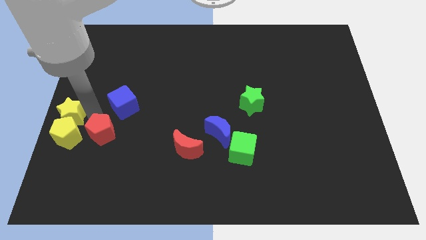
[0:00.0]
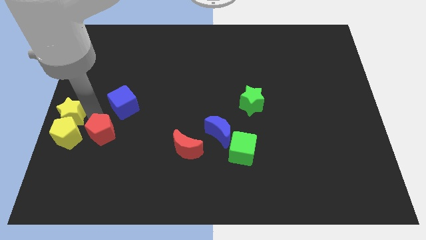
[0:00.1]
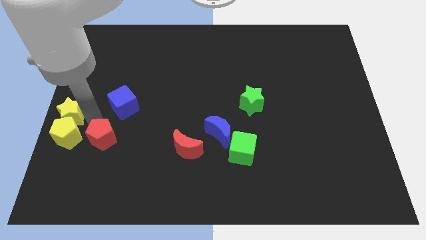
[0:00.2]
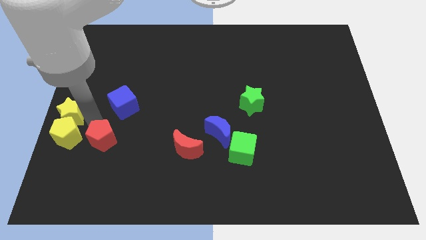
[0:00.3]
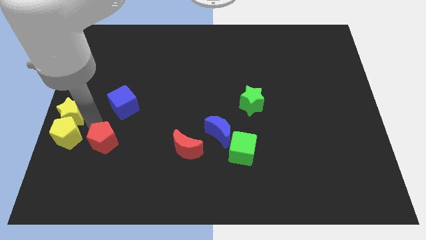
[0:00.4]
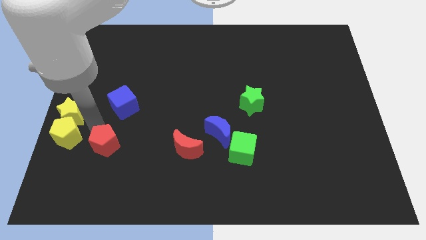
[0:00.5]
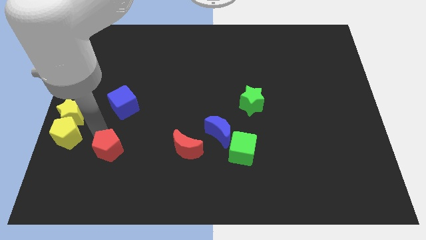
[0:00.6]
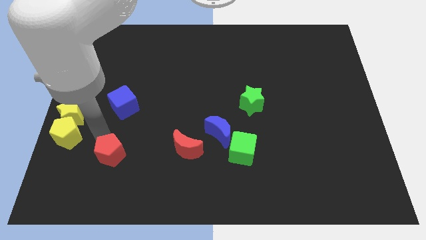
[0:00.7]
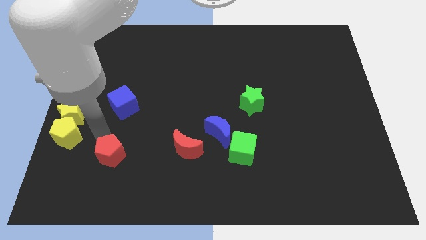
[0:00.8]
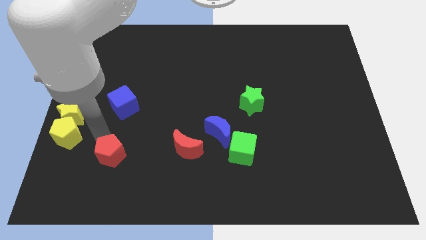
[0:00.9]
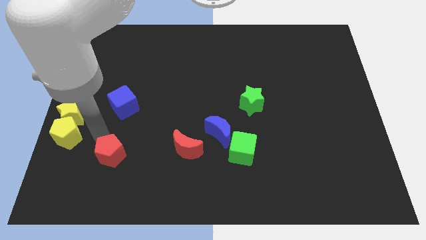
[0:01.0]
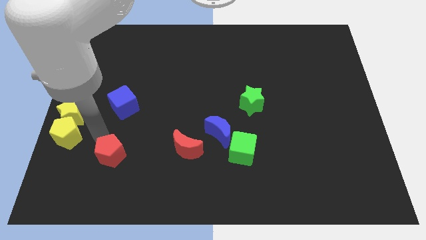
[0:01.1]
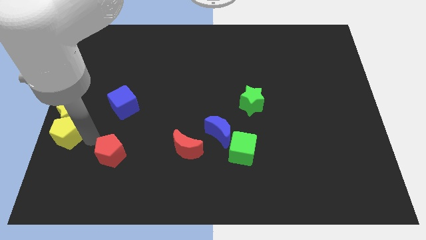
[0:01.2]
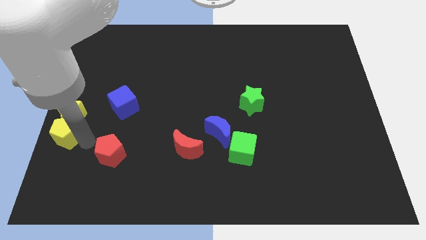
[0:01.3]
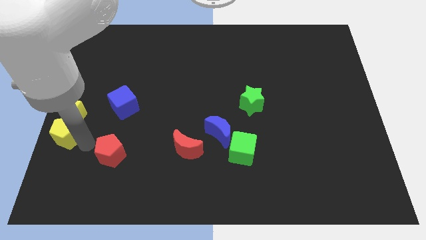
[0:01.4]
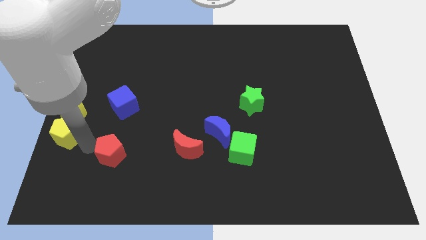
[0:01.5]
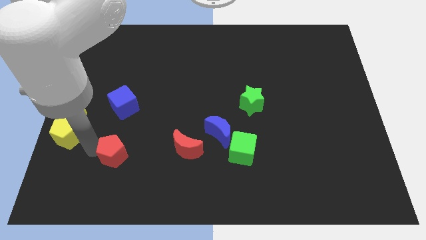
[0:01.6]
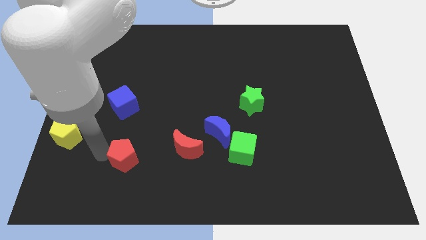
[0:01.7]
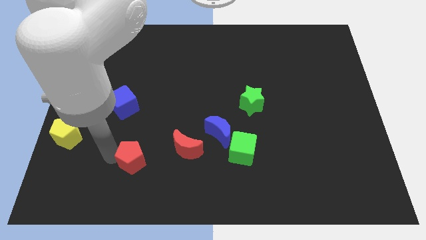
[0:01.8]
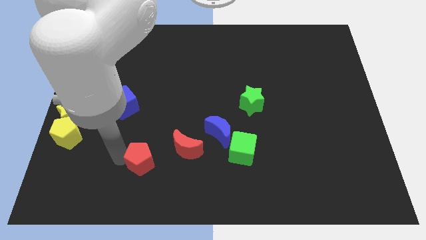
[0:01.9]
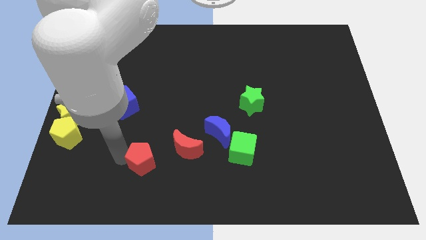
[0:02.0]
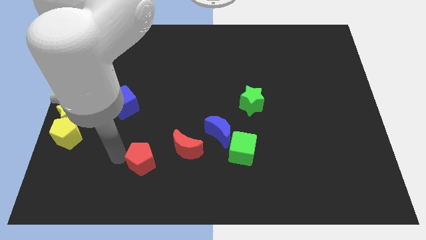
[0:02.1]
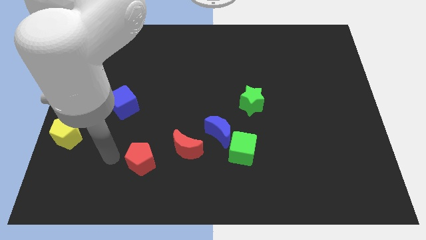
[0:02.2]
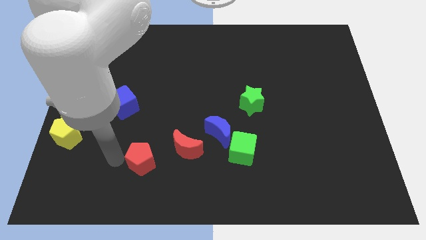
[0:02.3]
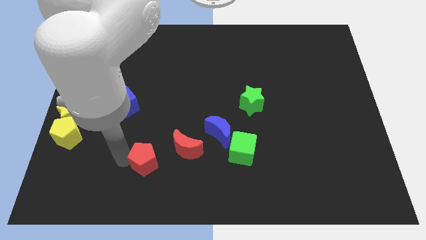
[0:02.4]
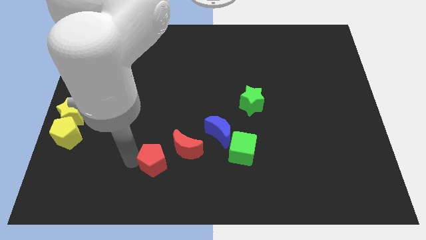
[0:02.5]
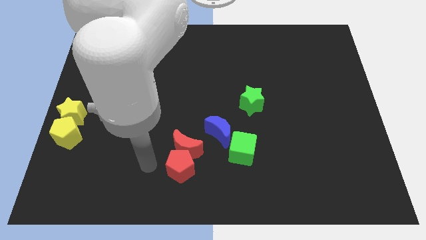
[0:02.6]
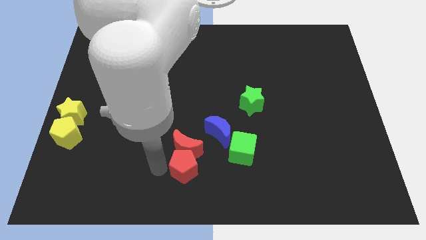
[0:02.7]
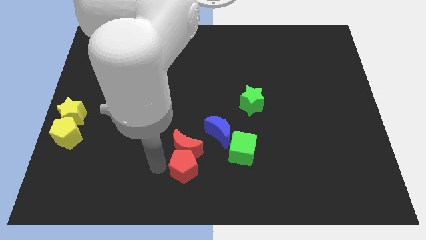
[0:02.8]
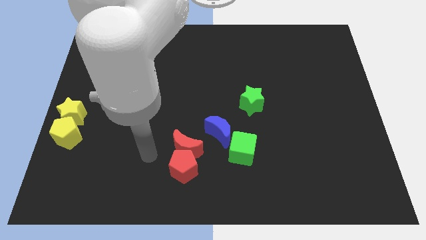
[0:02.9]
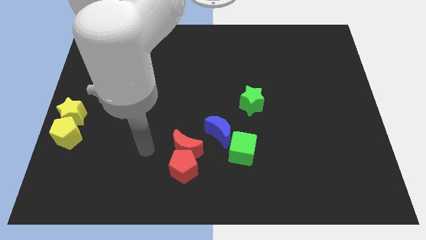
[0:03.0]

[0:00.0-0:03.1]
move the red pentagon to the bottom of the red crescent

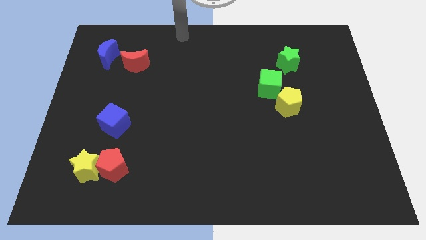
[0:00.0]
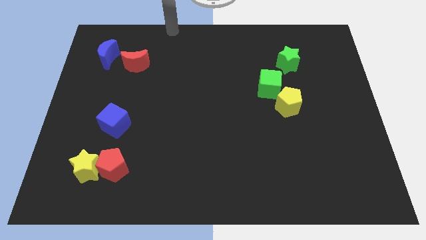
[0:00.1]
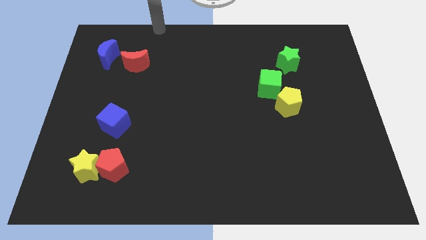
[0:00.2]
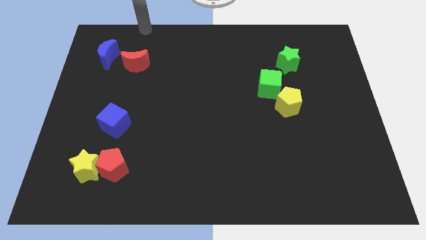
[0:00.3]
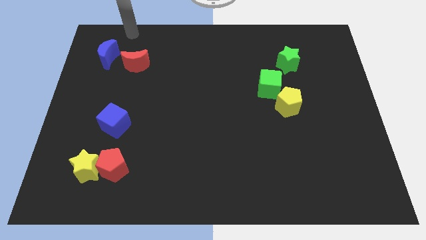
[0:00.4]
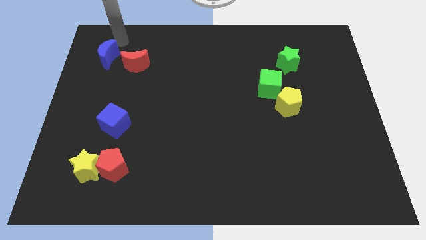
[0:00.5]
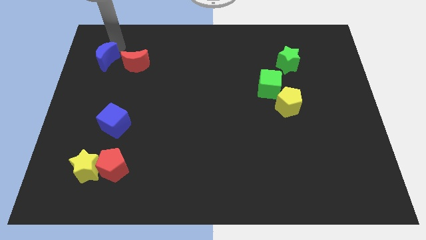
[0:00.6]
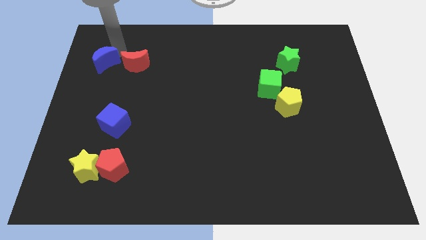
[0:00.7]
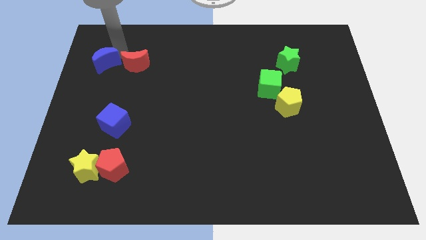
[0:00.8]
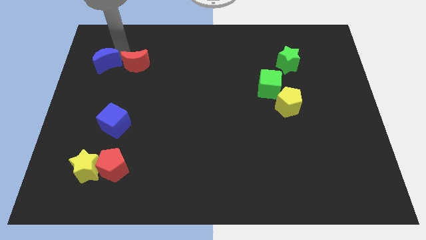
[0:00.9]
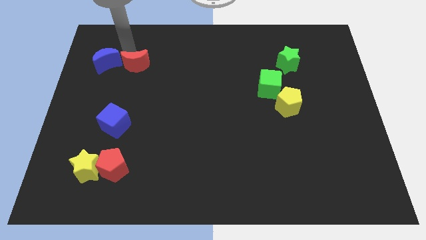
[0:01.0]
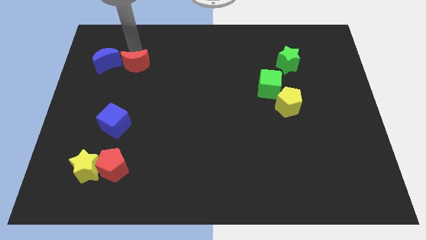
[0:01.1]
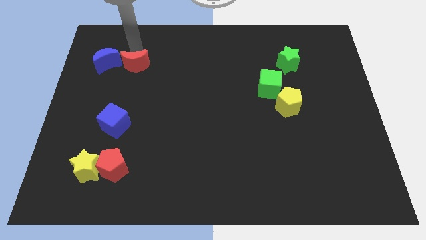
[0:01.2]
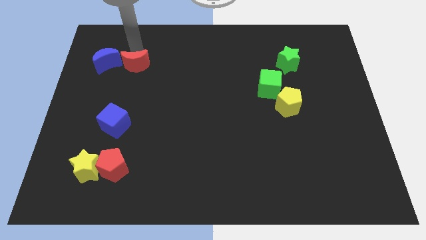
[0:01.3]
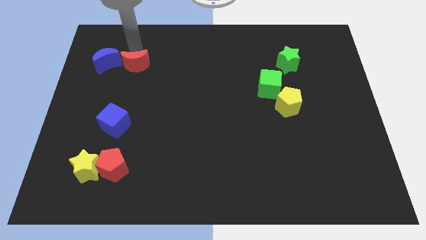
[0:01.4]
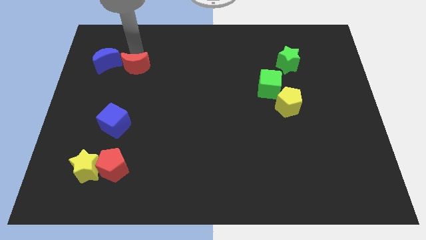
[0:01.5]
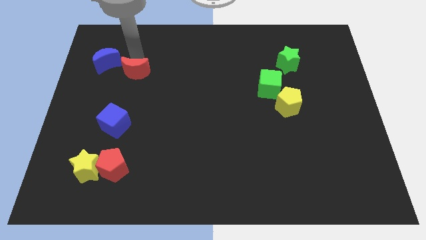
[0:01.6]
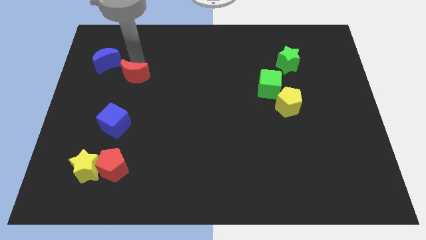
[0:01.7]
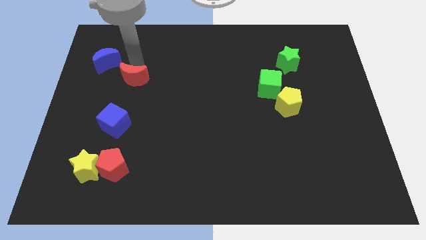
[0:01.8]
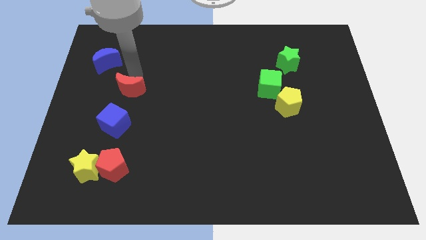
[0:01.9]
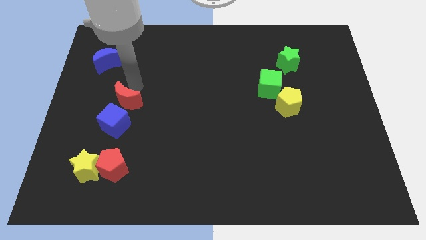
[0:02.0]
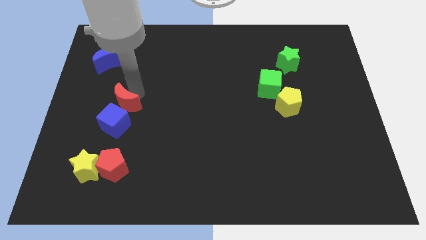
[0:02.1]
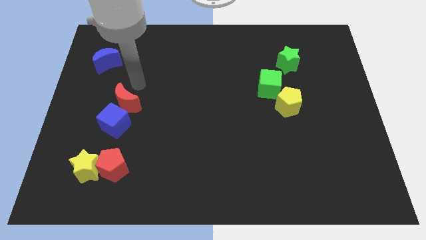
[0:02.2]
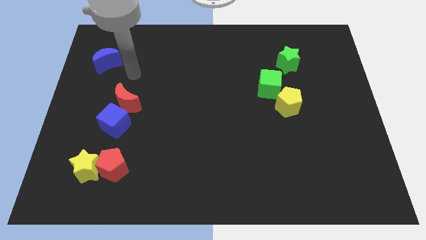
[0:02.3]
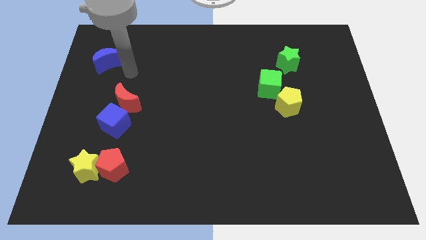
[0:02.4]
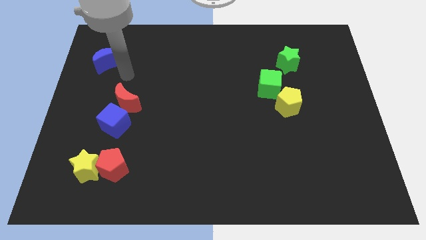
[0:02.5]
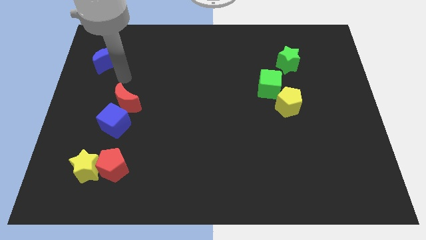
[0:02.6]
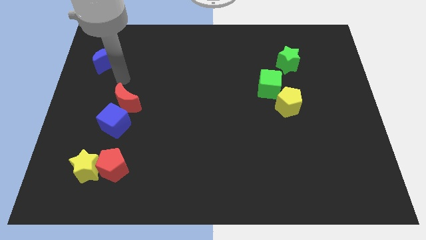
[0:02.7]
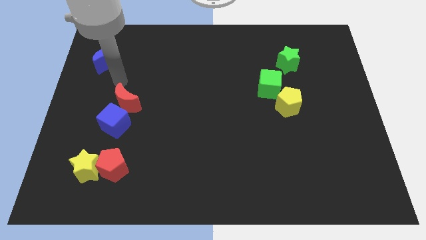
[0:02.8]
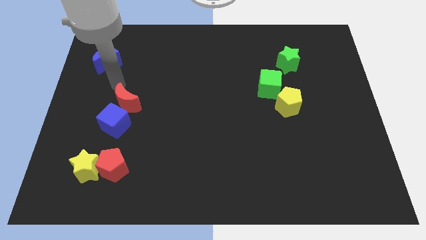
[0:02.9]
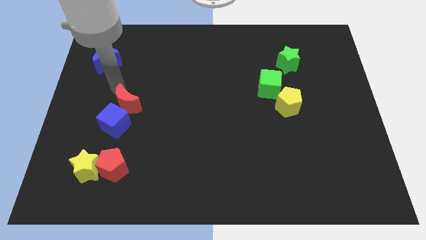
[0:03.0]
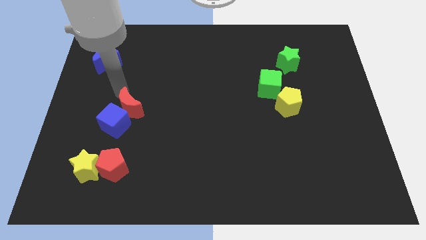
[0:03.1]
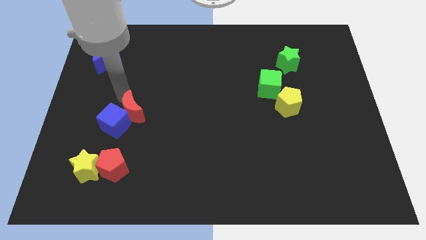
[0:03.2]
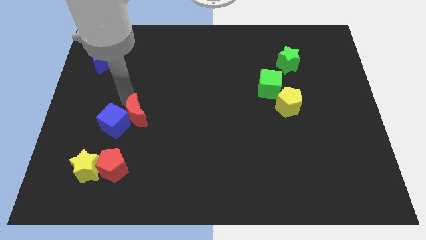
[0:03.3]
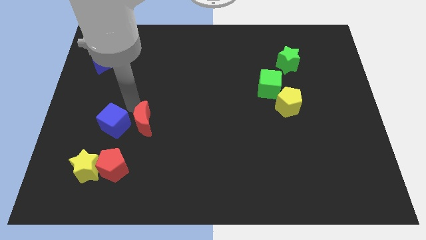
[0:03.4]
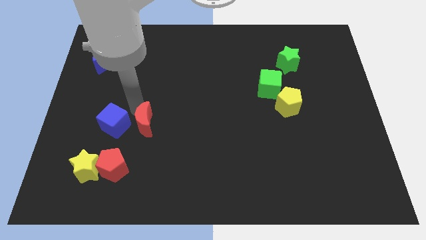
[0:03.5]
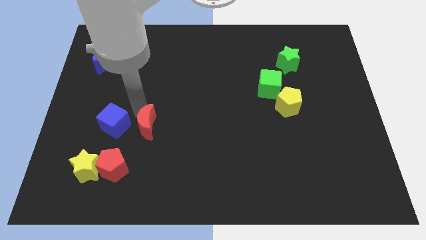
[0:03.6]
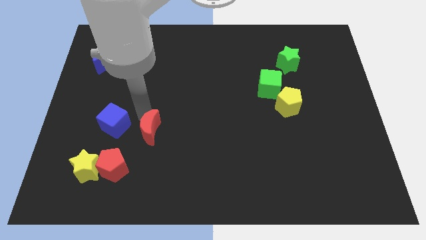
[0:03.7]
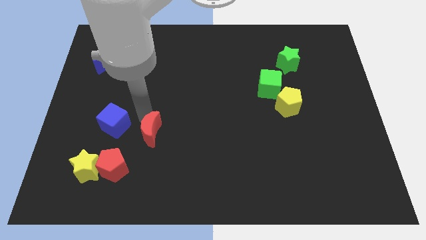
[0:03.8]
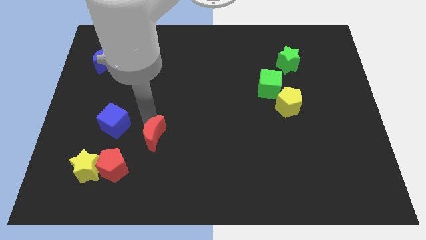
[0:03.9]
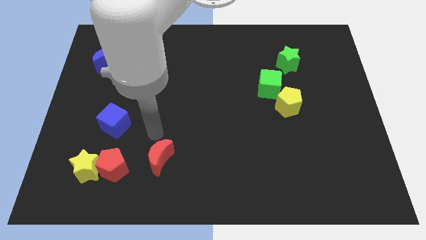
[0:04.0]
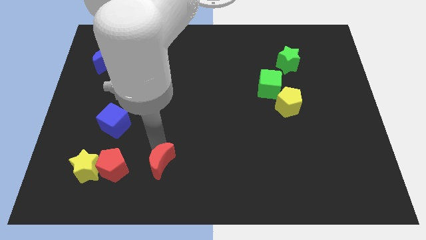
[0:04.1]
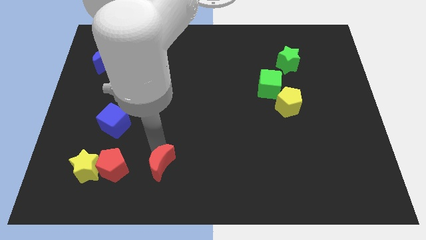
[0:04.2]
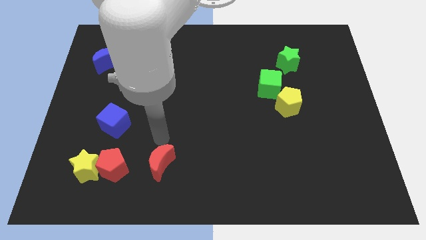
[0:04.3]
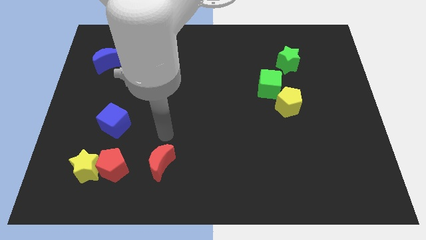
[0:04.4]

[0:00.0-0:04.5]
place the red moon to the right of red pentagon

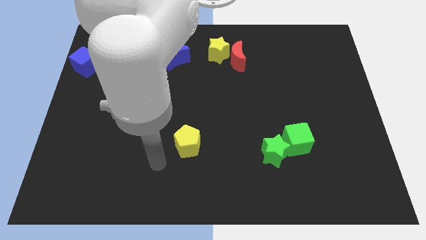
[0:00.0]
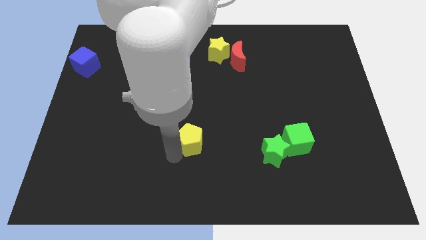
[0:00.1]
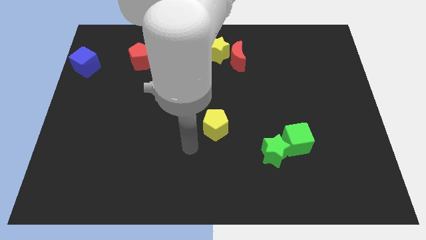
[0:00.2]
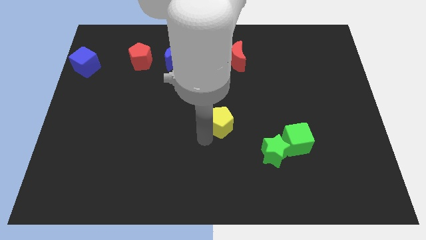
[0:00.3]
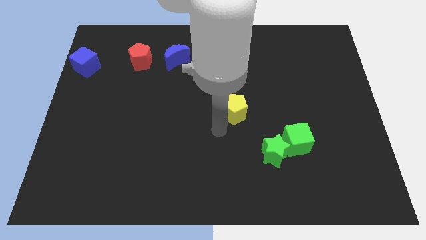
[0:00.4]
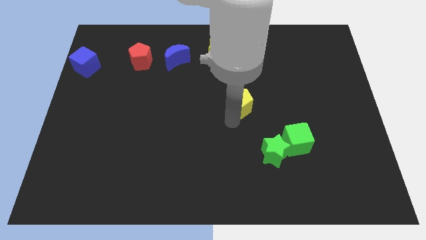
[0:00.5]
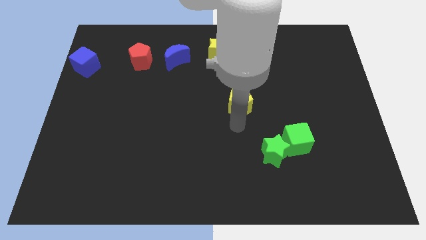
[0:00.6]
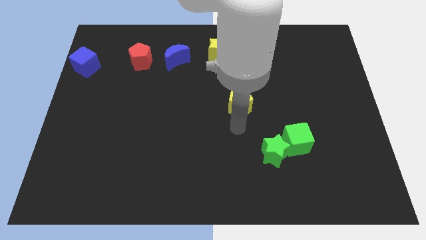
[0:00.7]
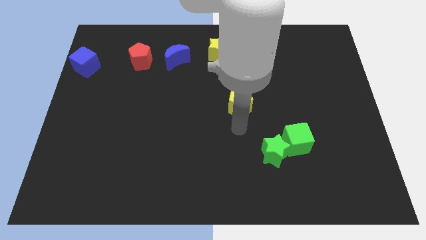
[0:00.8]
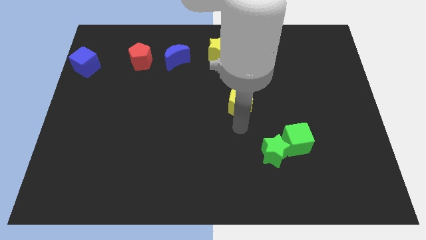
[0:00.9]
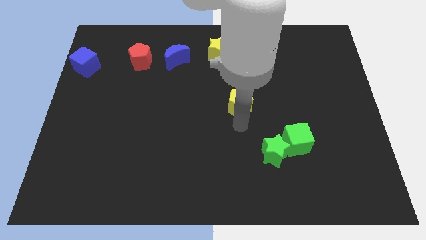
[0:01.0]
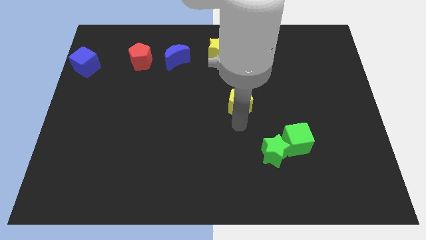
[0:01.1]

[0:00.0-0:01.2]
push the yellow pentagon diagonal to the top left to the green star

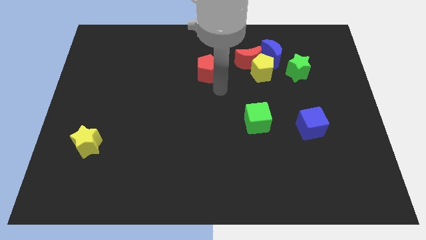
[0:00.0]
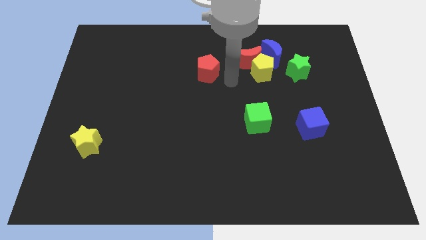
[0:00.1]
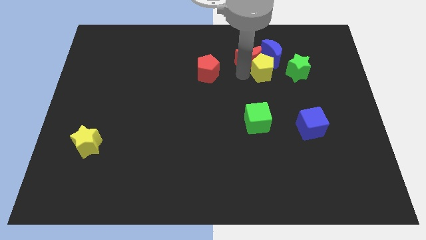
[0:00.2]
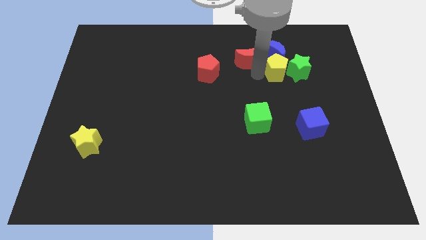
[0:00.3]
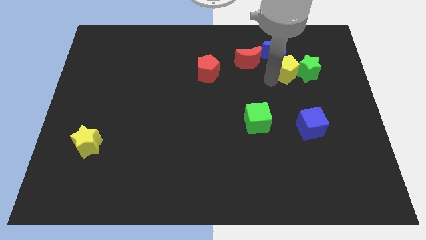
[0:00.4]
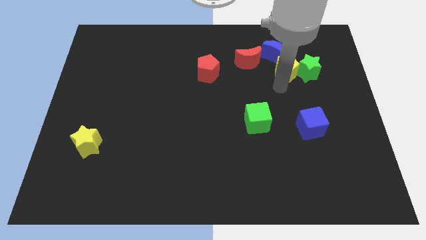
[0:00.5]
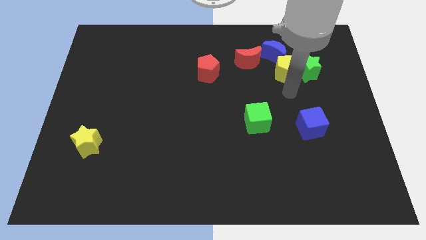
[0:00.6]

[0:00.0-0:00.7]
push the yellow pentagon into the green star towards right
